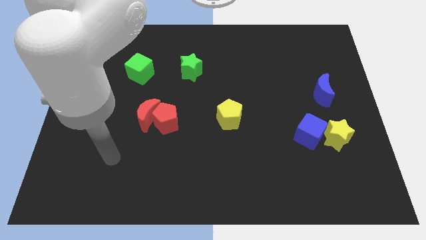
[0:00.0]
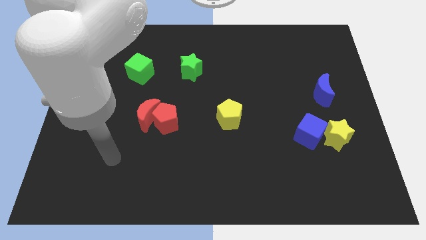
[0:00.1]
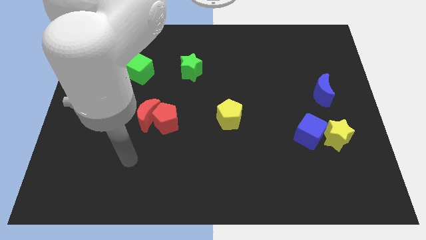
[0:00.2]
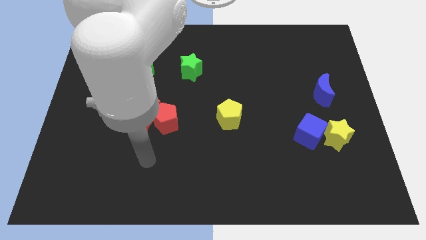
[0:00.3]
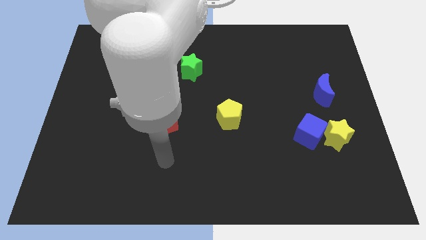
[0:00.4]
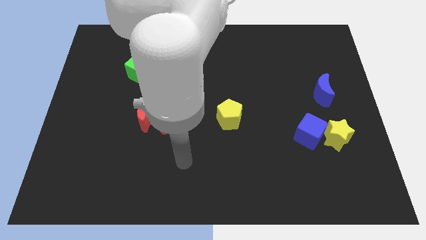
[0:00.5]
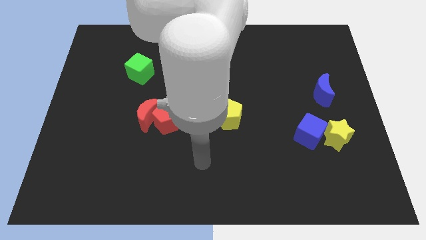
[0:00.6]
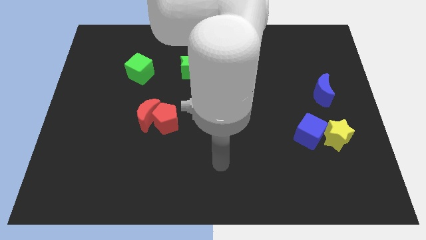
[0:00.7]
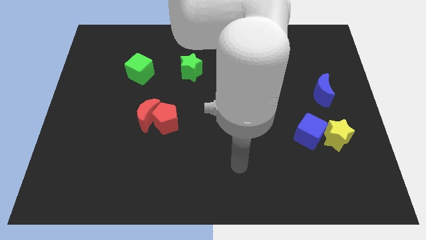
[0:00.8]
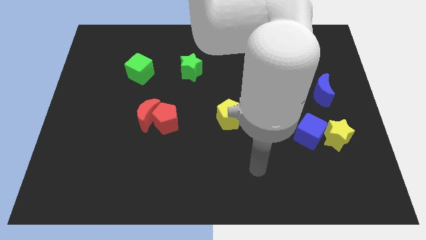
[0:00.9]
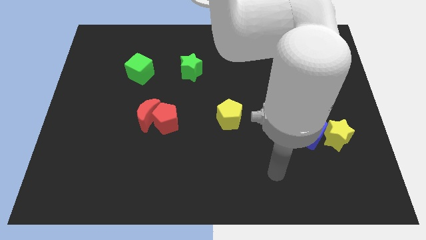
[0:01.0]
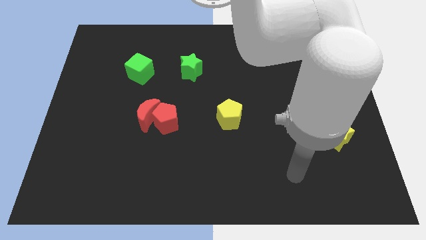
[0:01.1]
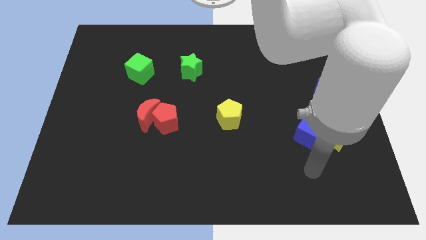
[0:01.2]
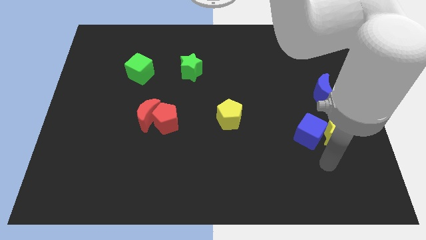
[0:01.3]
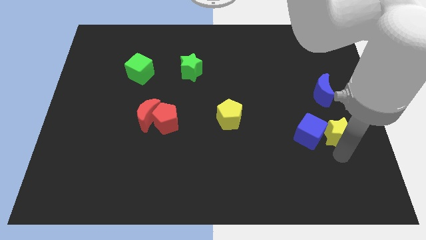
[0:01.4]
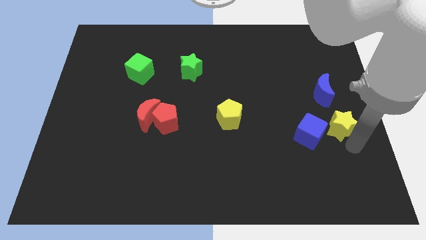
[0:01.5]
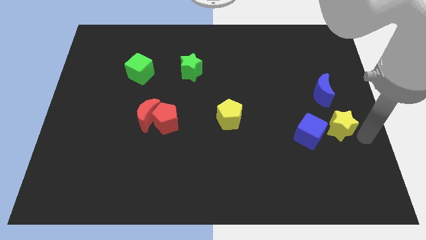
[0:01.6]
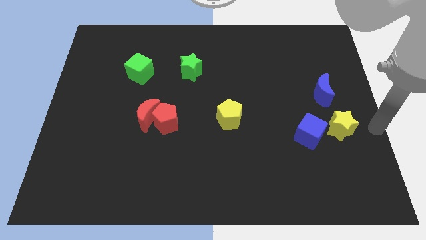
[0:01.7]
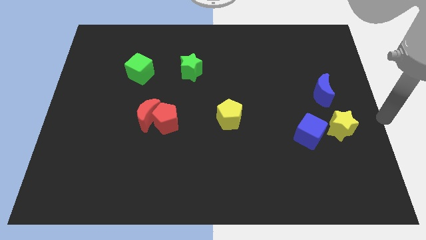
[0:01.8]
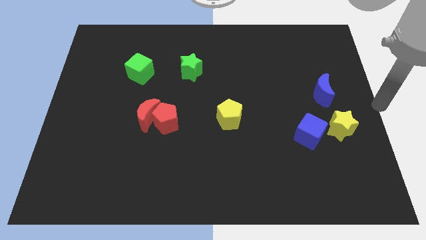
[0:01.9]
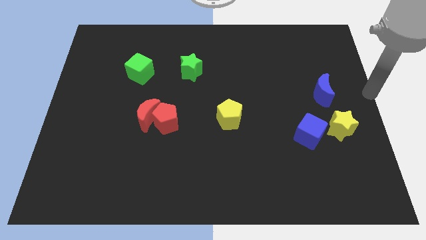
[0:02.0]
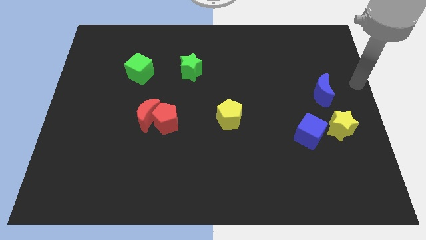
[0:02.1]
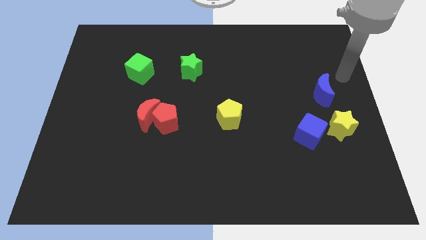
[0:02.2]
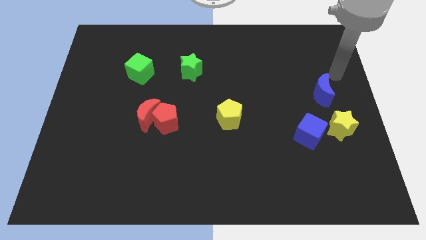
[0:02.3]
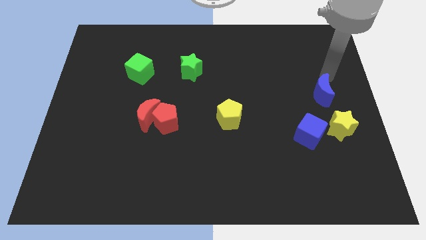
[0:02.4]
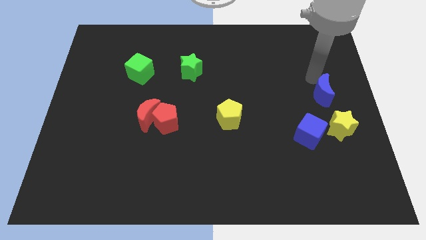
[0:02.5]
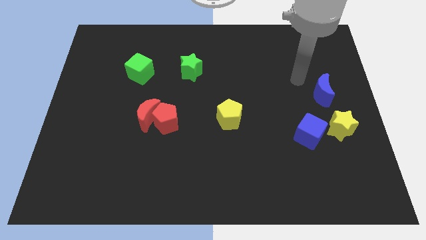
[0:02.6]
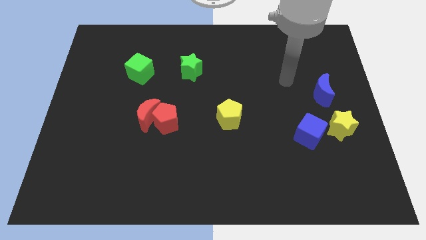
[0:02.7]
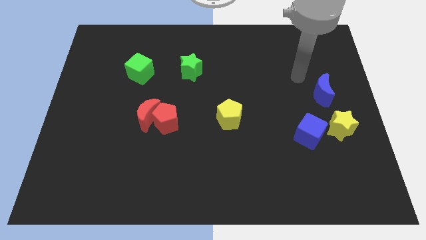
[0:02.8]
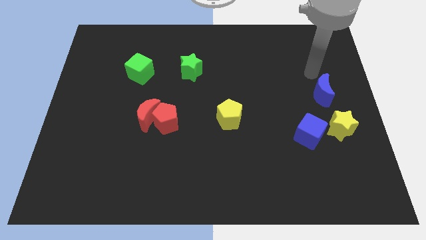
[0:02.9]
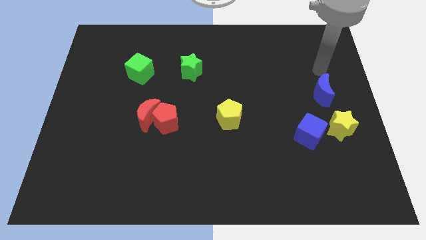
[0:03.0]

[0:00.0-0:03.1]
slide yellow star slightly to the right

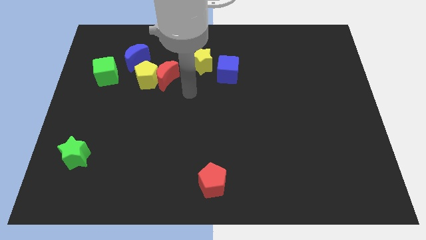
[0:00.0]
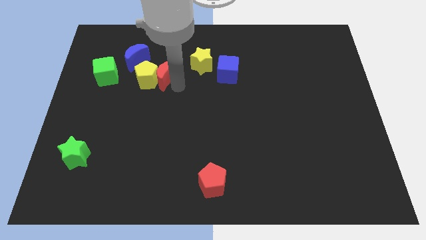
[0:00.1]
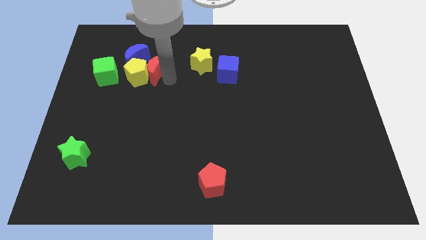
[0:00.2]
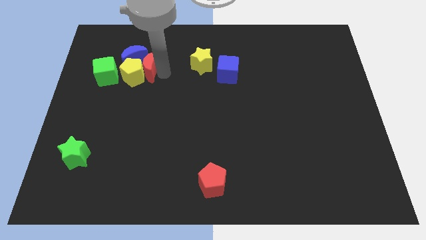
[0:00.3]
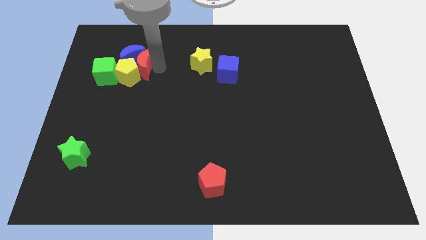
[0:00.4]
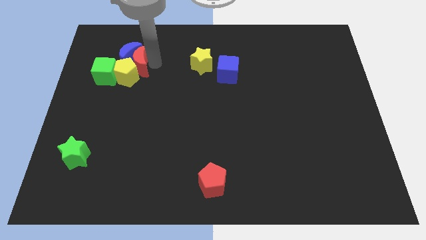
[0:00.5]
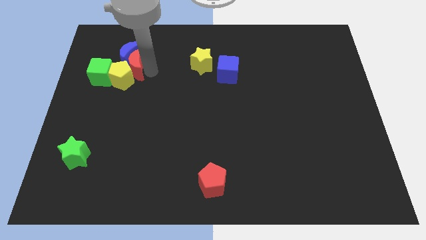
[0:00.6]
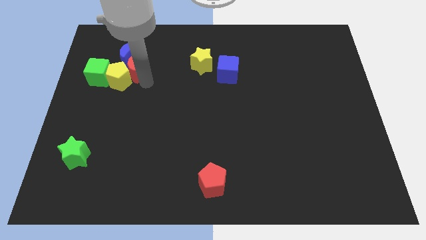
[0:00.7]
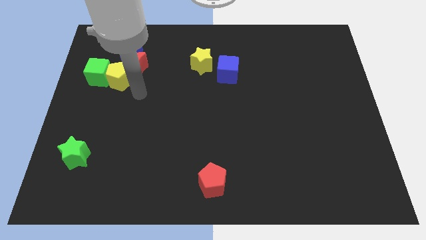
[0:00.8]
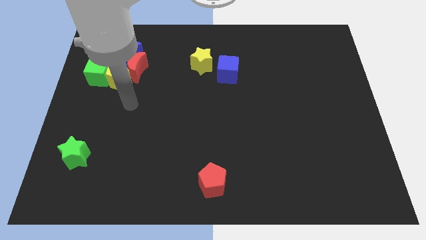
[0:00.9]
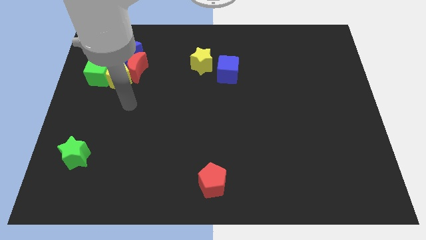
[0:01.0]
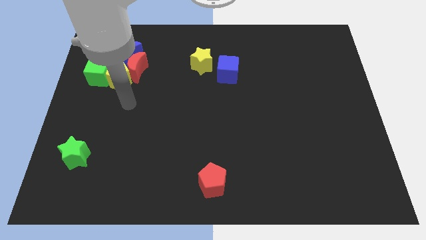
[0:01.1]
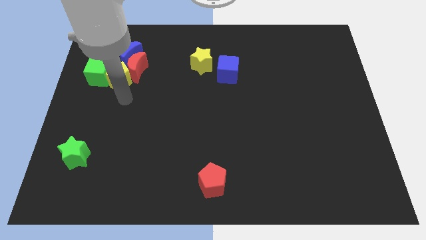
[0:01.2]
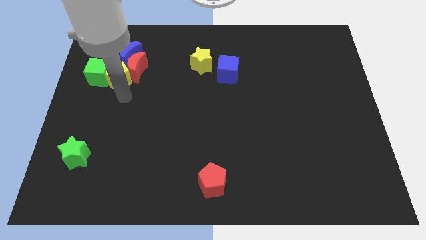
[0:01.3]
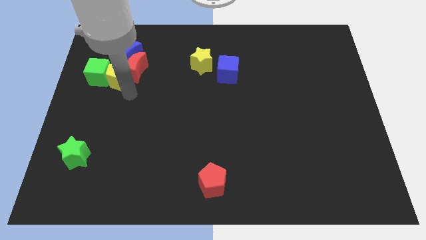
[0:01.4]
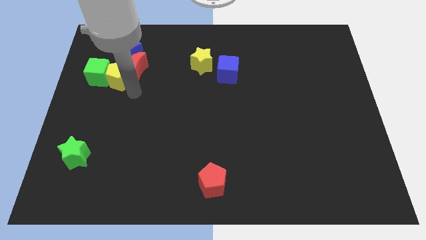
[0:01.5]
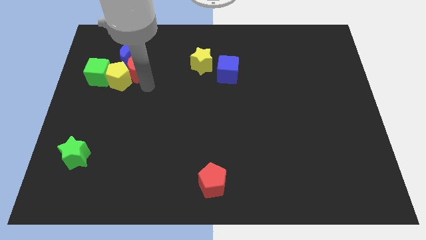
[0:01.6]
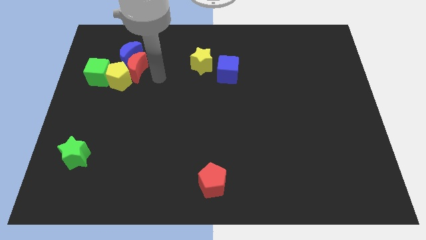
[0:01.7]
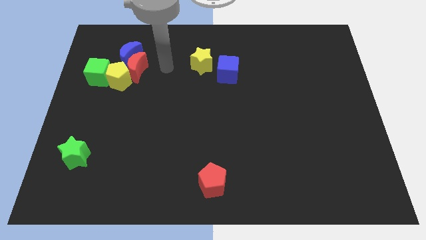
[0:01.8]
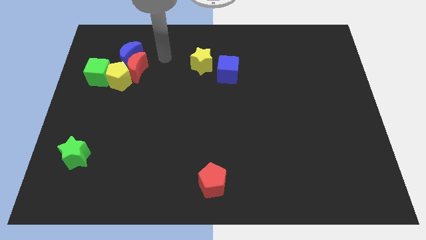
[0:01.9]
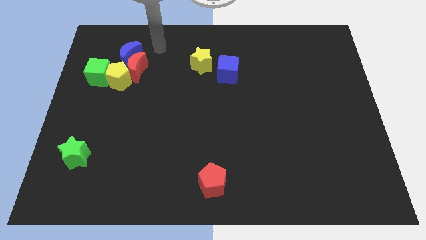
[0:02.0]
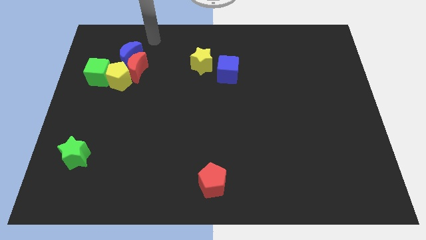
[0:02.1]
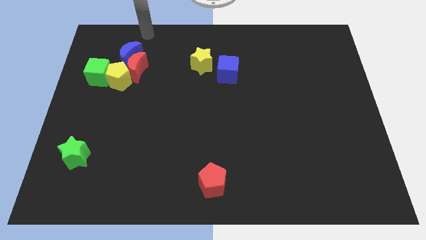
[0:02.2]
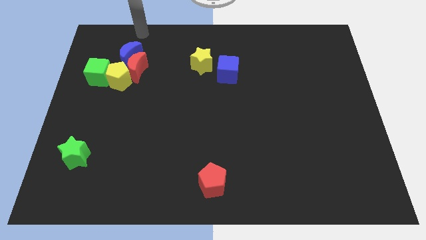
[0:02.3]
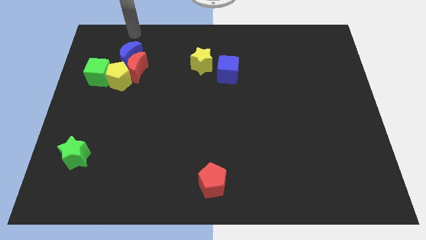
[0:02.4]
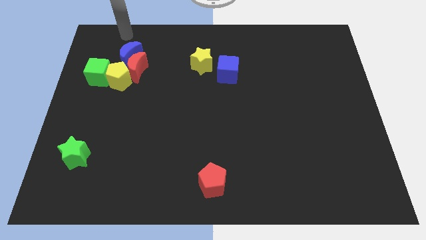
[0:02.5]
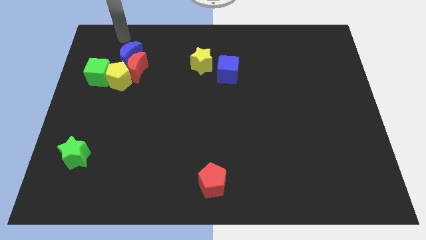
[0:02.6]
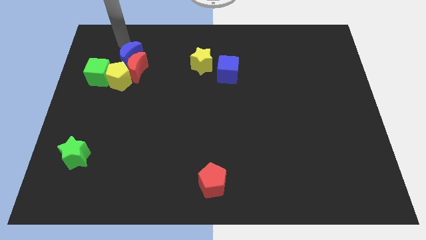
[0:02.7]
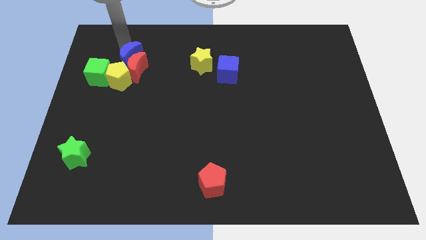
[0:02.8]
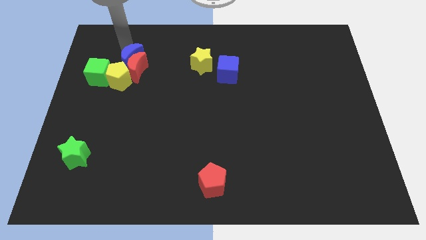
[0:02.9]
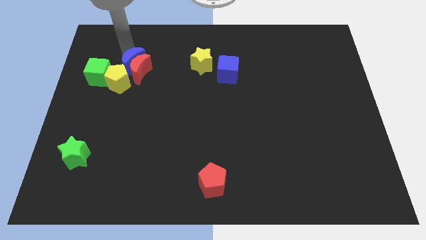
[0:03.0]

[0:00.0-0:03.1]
slide the red moon slightly to the left

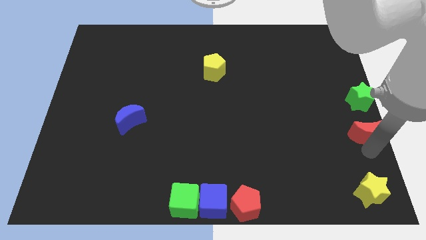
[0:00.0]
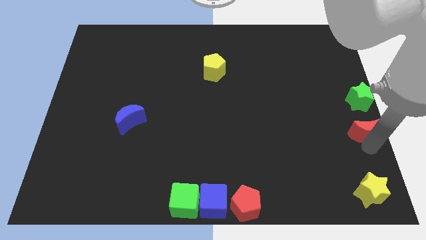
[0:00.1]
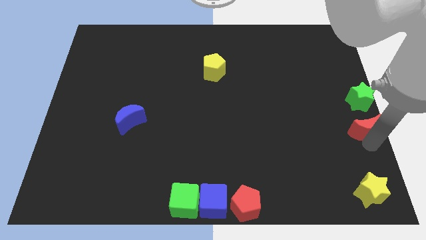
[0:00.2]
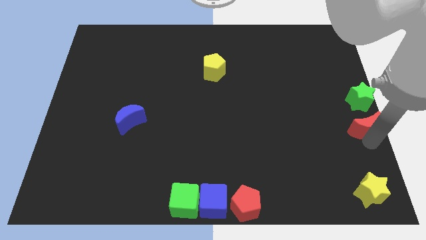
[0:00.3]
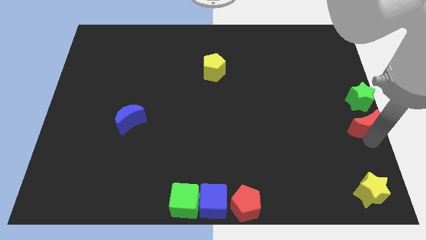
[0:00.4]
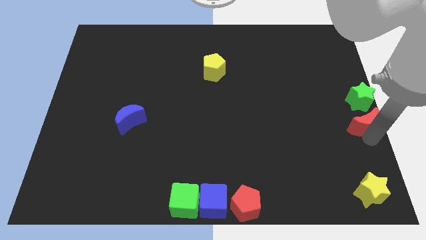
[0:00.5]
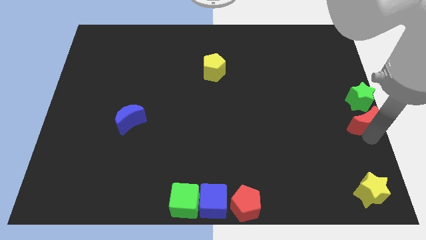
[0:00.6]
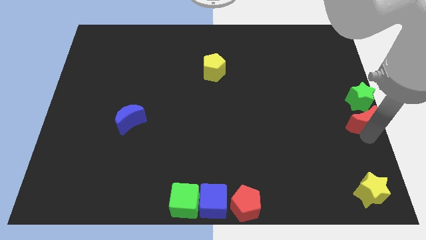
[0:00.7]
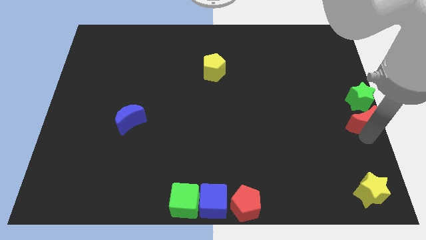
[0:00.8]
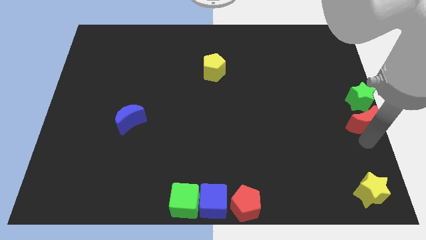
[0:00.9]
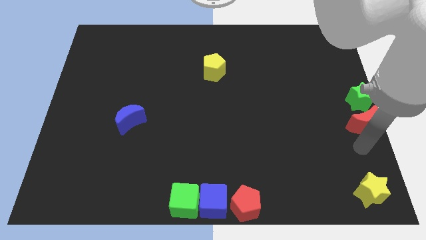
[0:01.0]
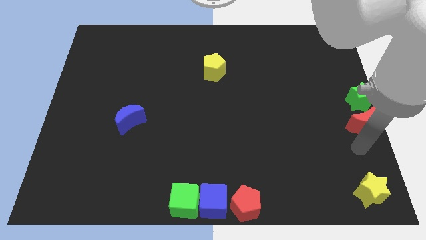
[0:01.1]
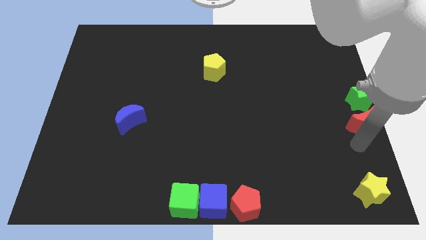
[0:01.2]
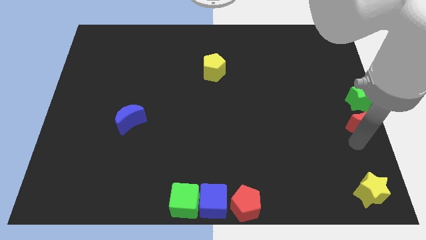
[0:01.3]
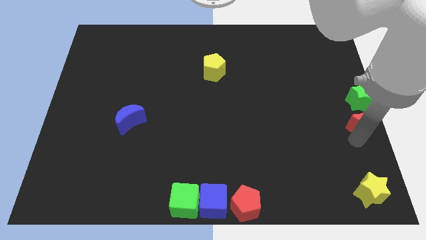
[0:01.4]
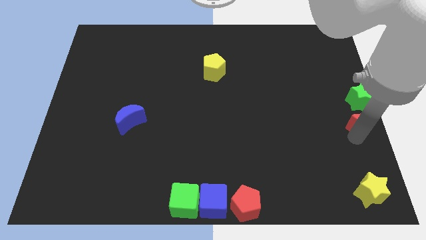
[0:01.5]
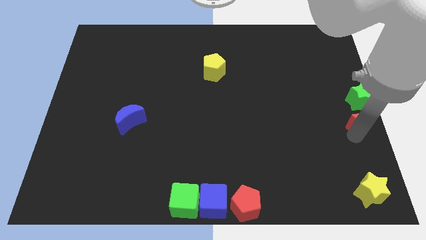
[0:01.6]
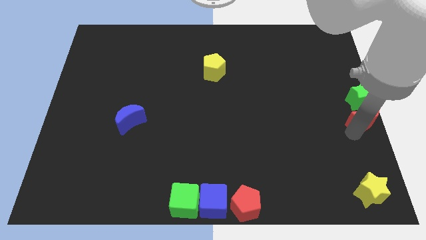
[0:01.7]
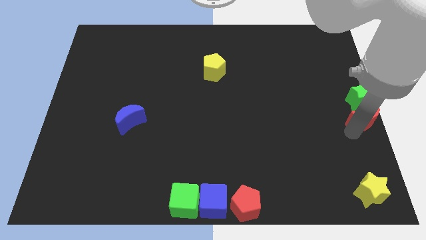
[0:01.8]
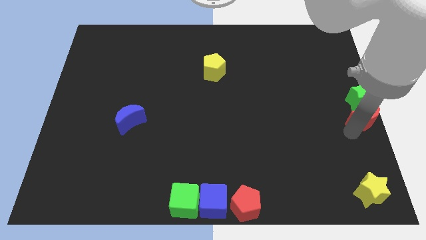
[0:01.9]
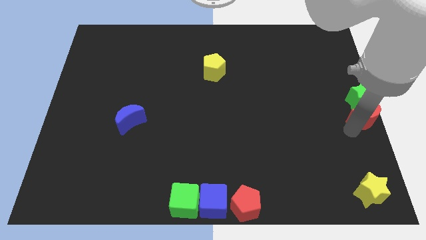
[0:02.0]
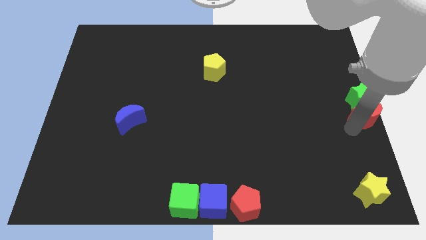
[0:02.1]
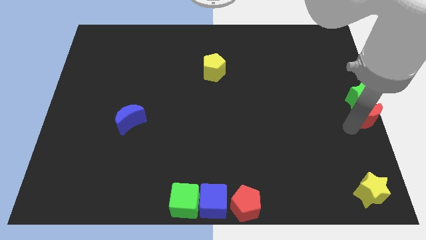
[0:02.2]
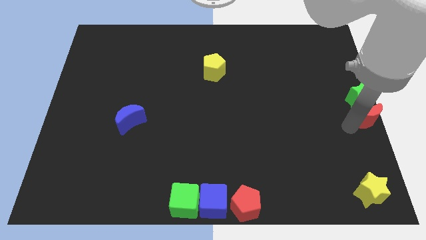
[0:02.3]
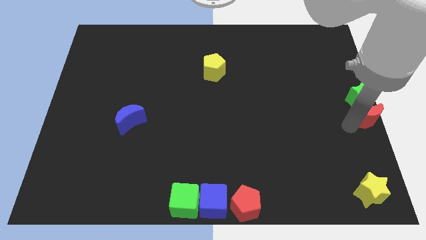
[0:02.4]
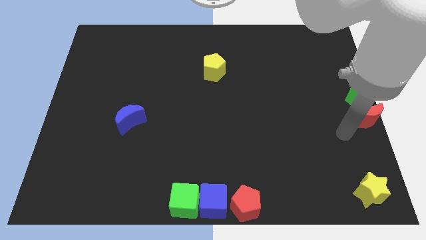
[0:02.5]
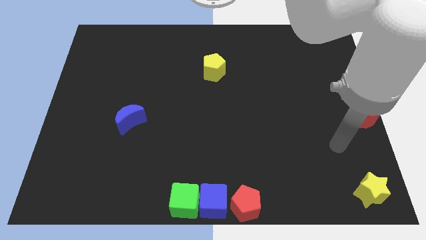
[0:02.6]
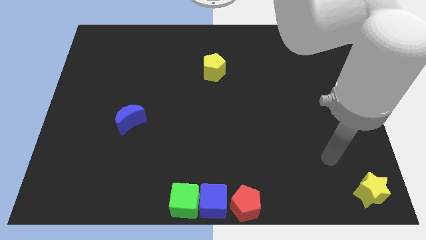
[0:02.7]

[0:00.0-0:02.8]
move the red crescent to the bottom side of the green star

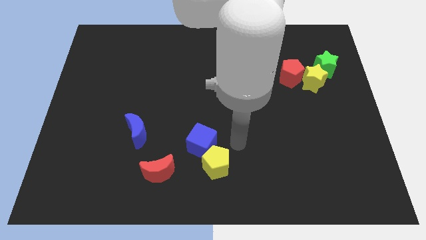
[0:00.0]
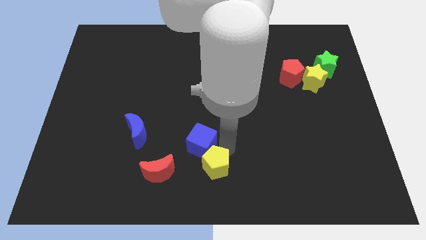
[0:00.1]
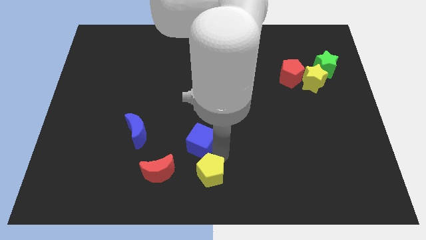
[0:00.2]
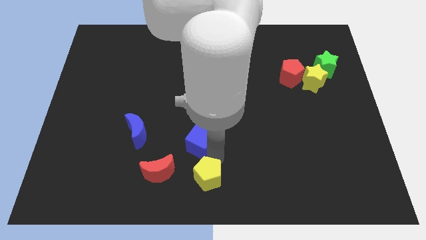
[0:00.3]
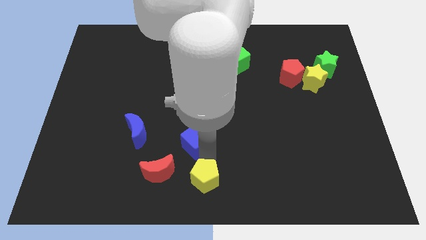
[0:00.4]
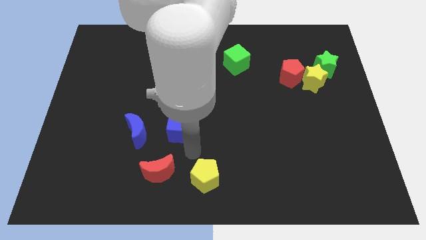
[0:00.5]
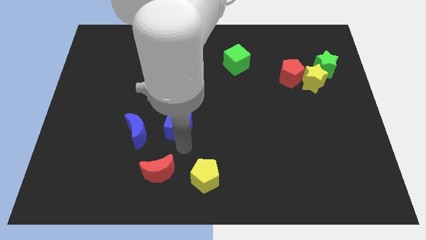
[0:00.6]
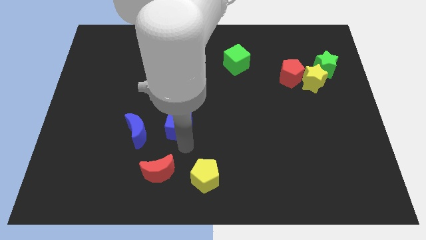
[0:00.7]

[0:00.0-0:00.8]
move the yellow pentagon right to the red crescent
